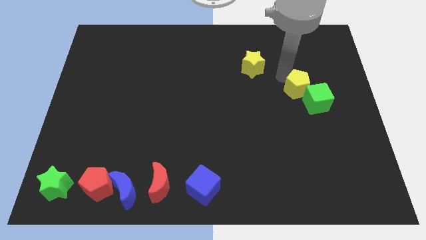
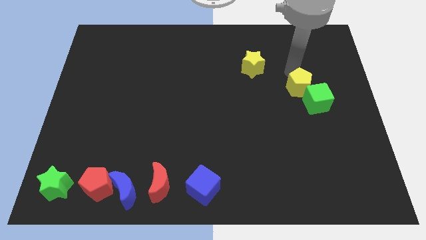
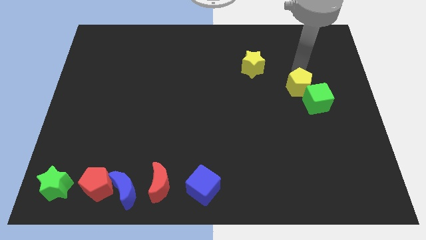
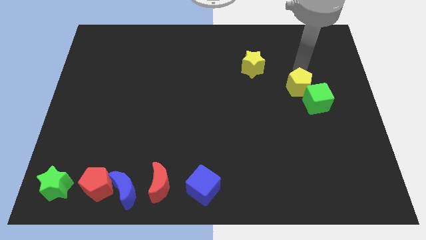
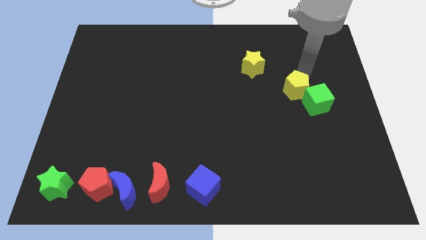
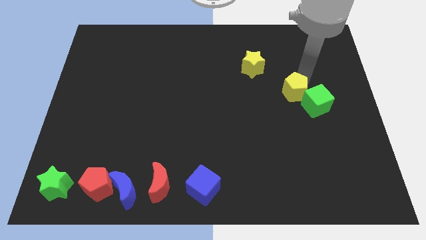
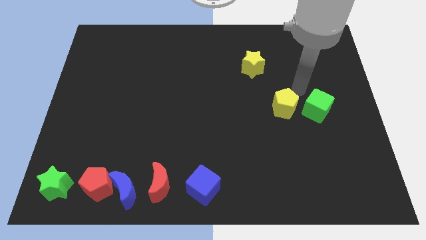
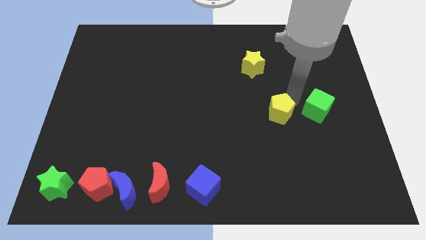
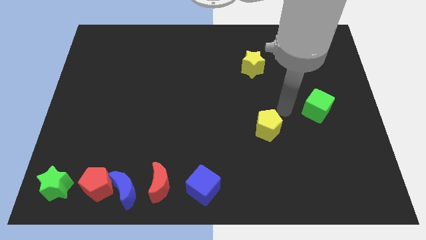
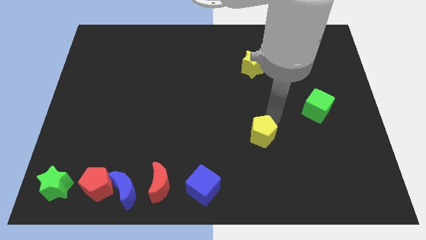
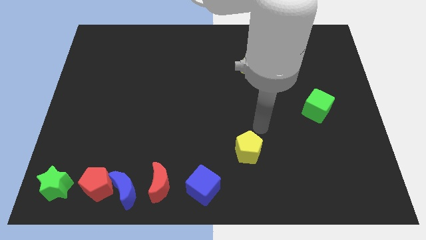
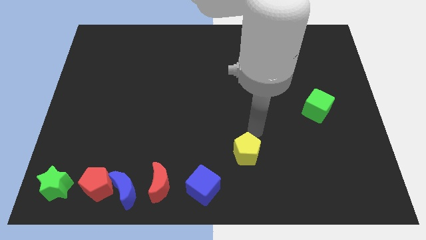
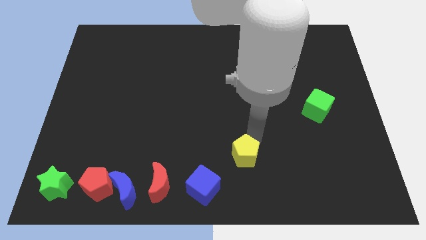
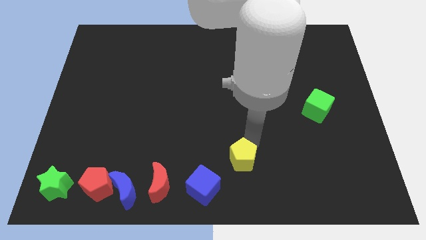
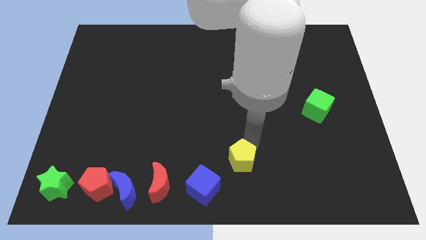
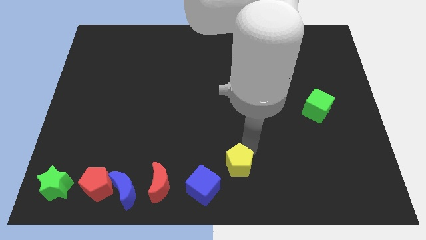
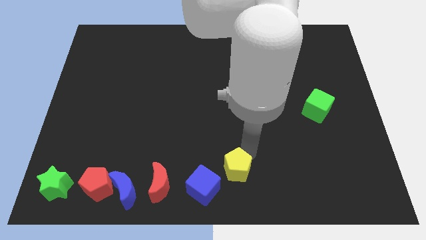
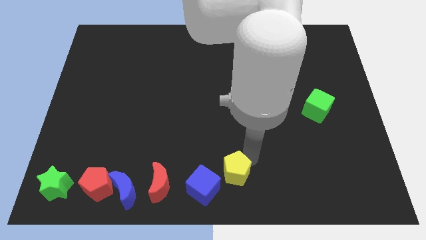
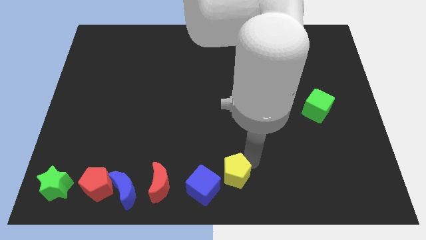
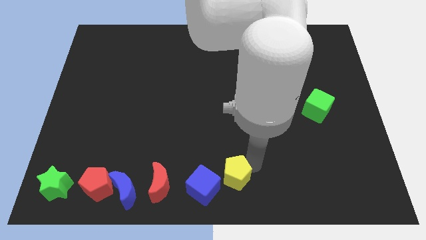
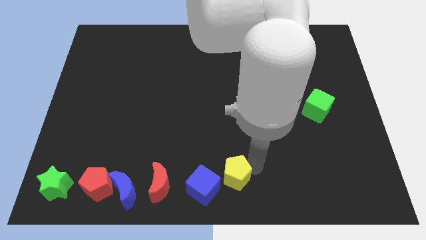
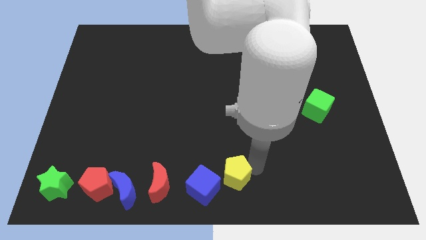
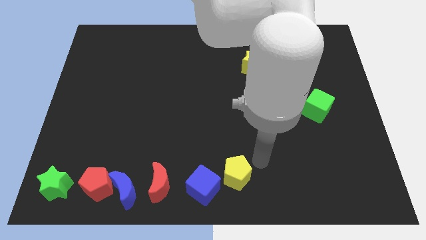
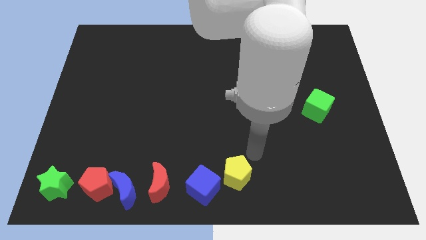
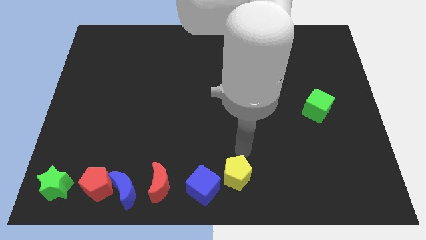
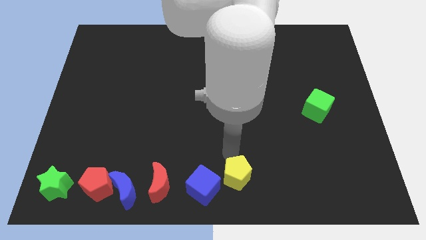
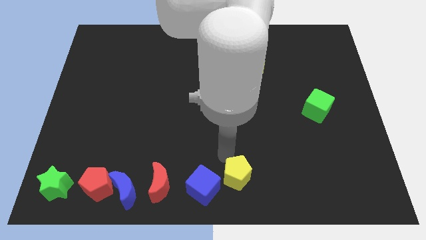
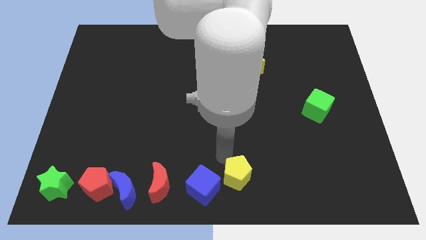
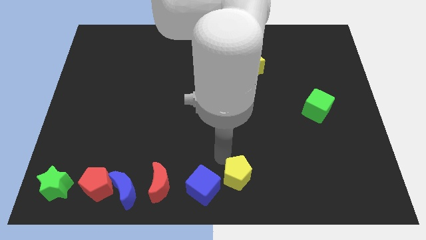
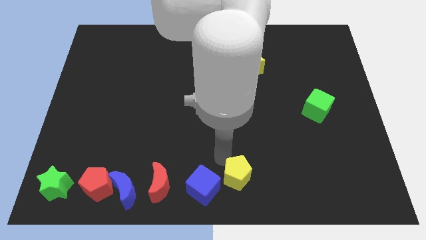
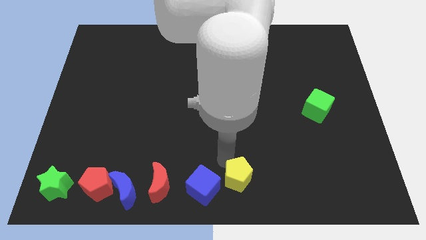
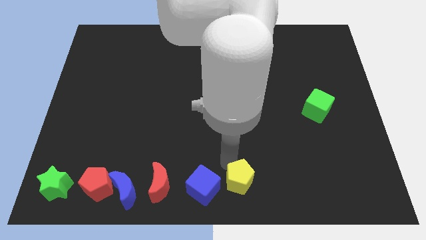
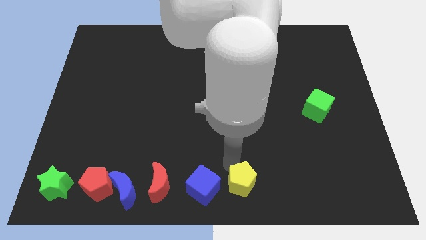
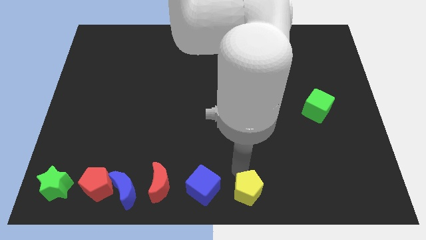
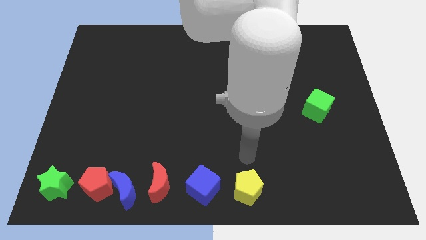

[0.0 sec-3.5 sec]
move the yellow pentagon right to the blue cube

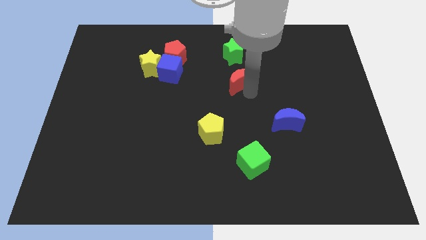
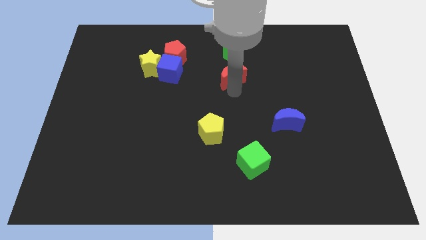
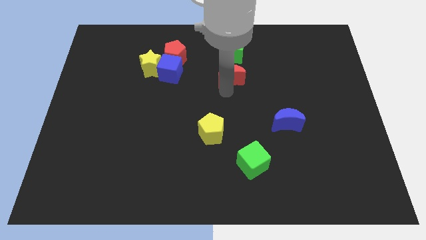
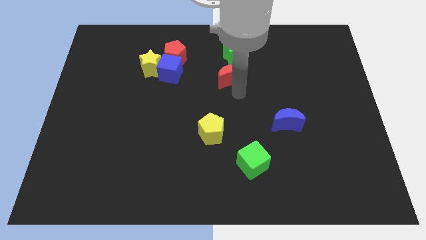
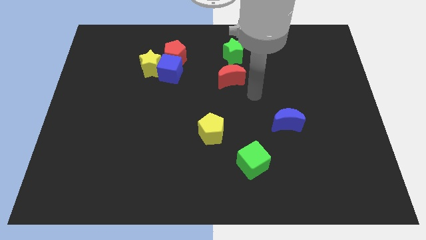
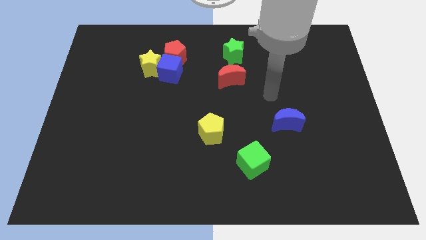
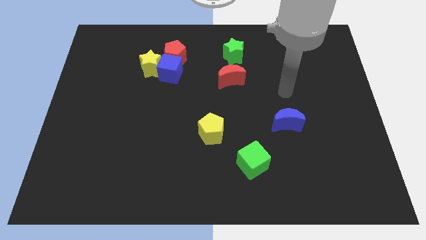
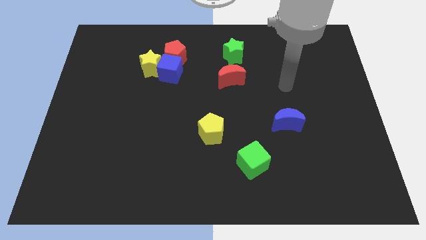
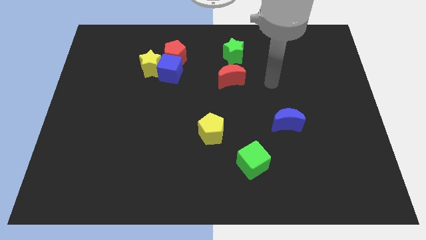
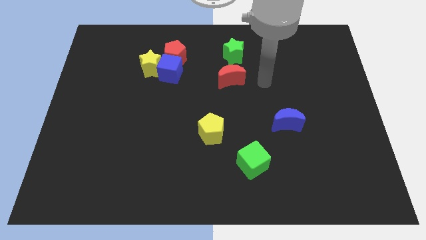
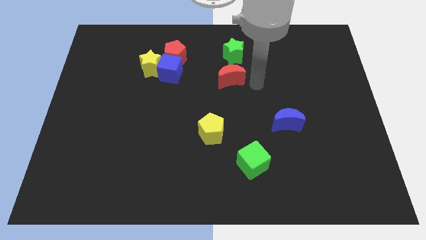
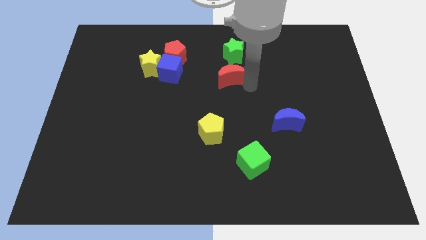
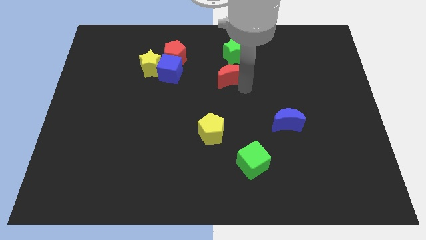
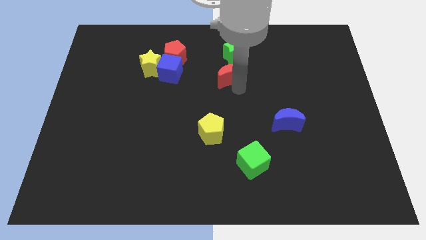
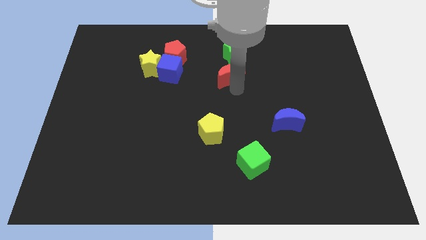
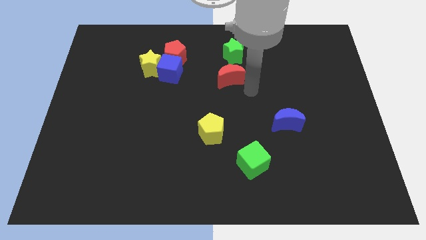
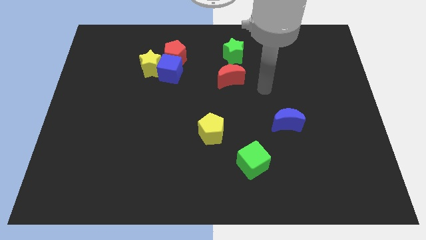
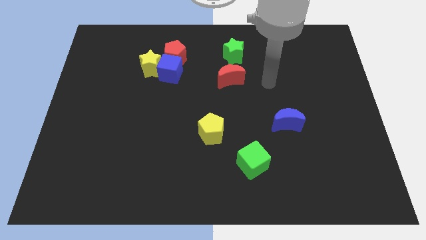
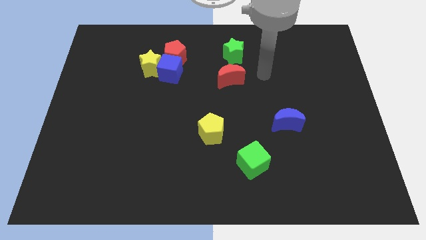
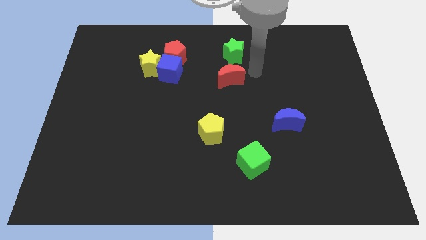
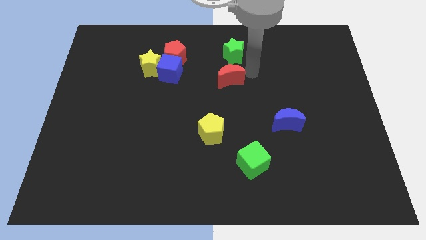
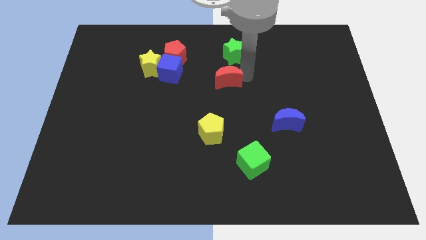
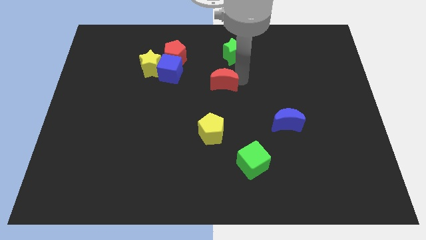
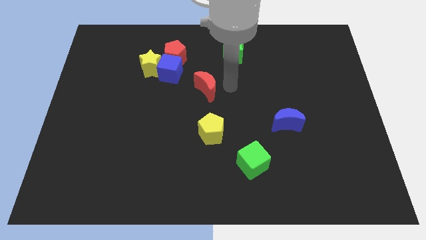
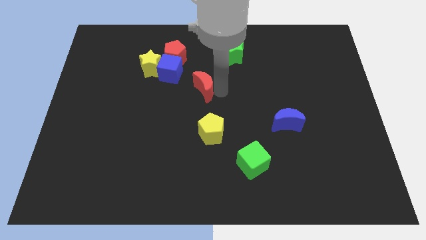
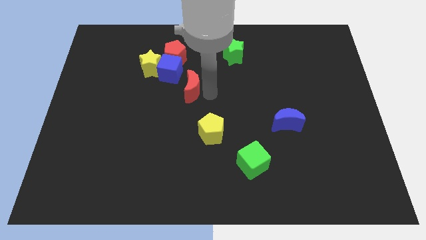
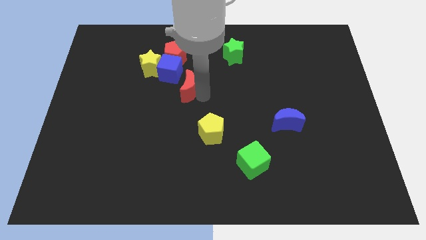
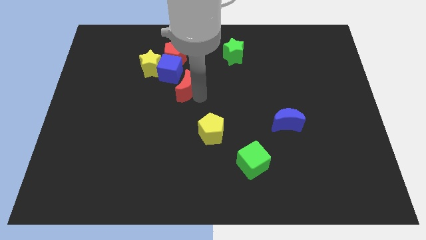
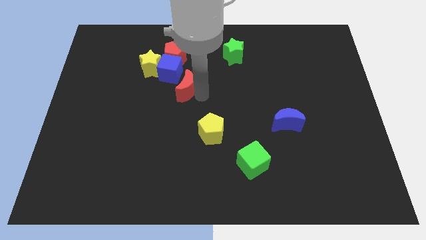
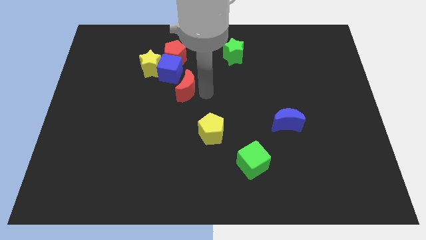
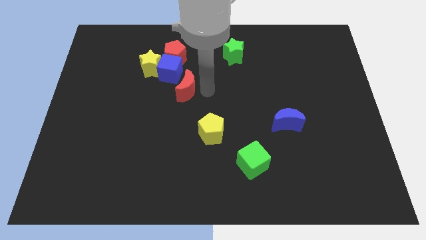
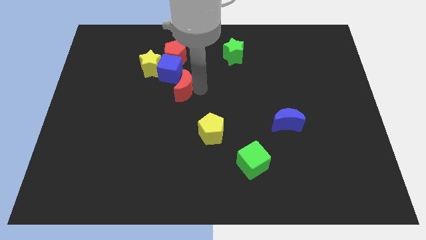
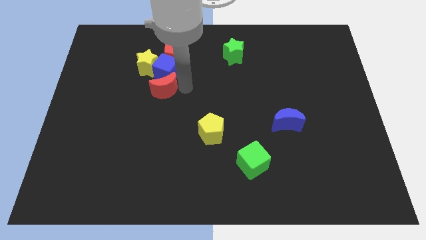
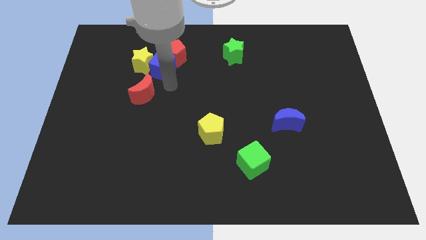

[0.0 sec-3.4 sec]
push red crescent below blue cube

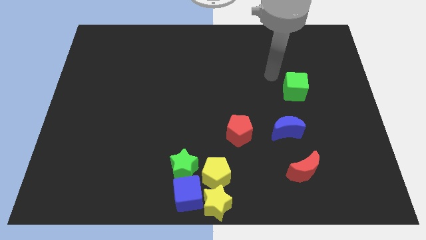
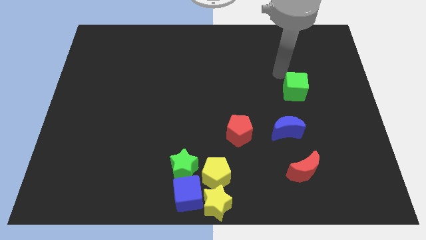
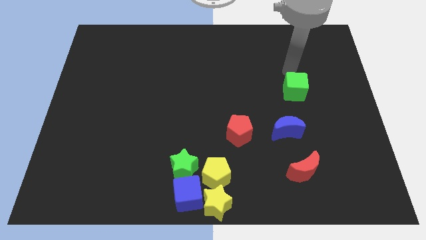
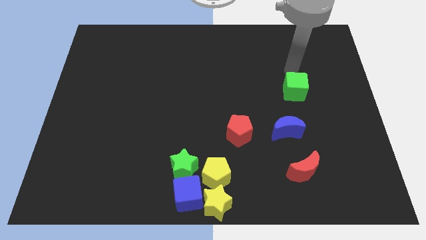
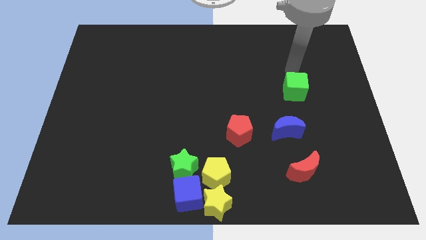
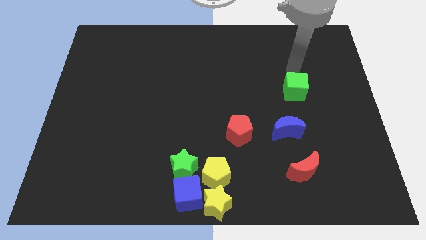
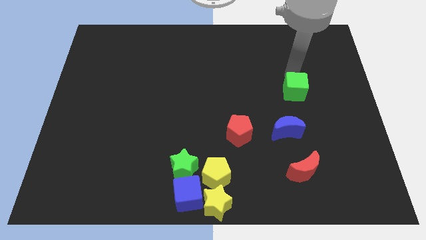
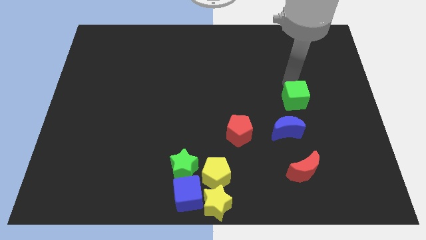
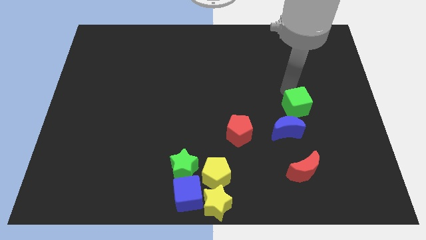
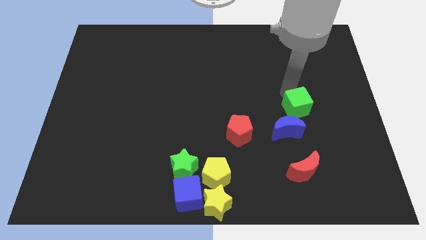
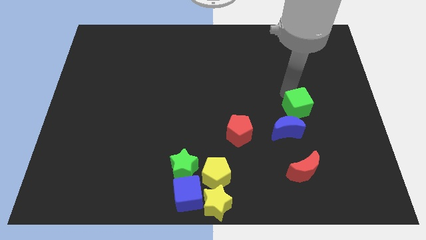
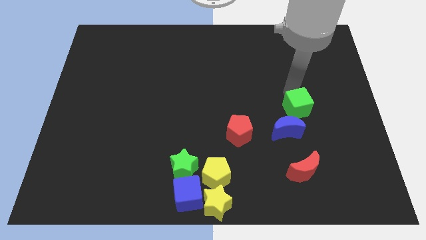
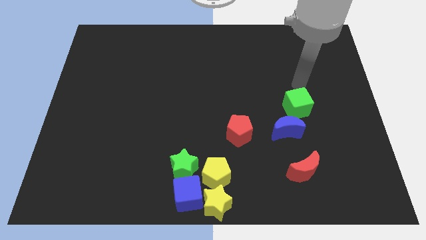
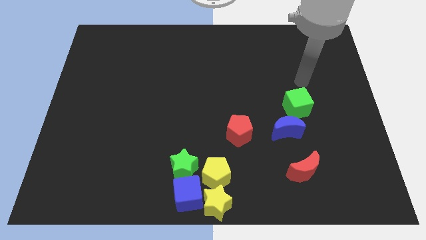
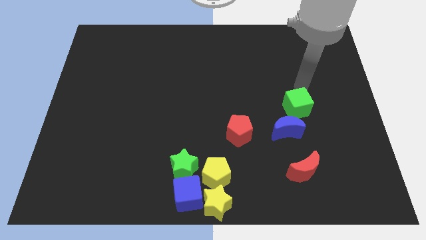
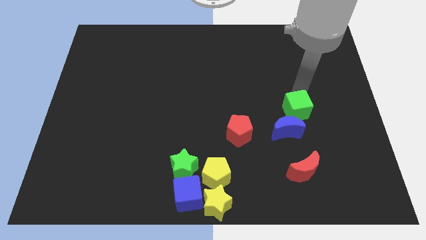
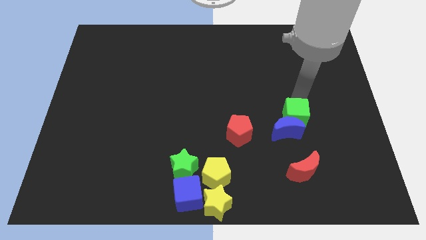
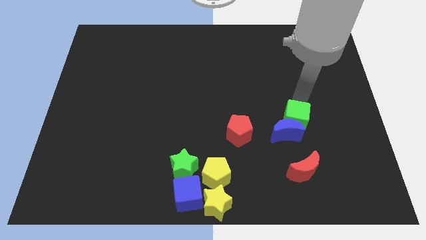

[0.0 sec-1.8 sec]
push the green cube towards the blue crescent

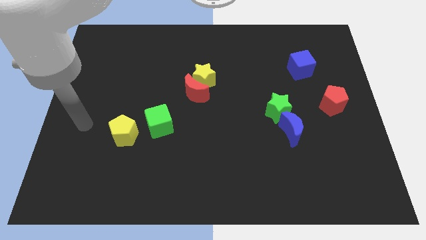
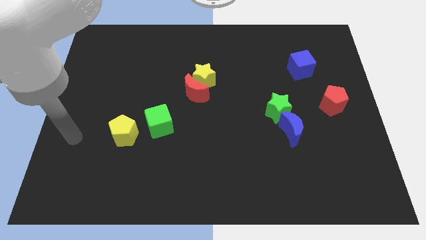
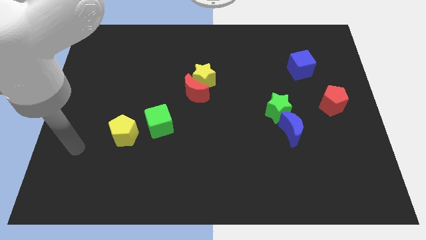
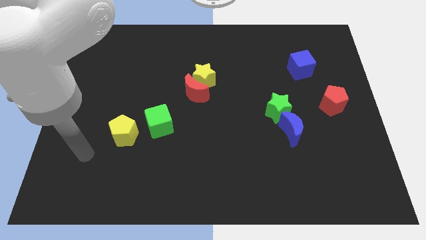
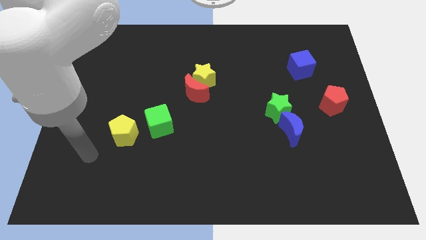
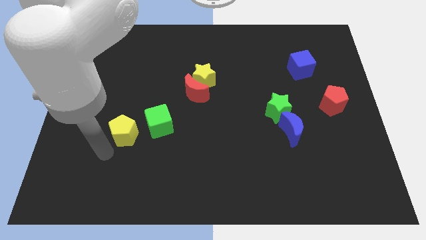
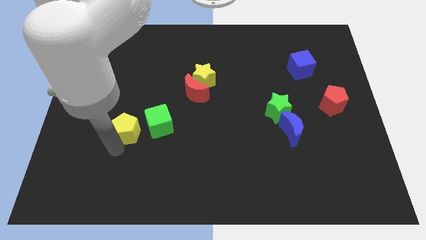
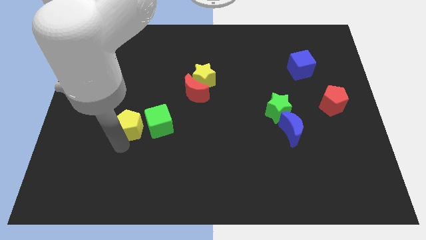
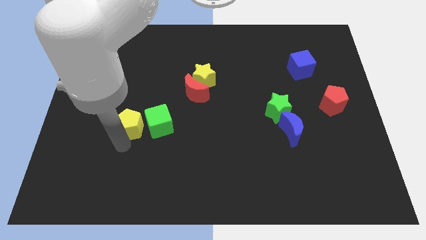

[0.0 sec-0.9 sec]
slightly push the yellow pentagon to the left of the green cube
